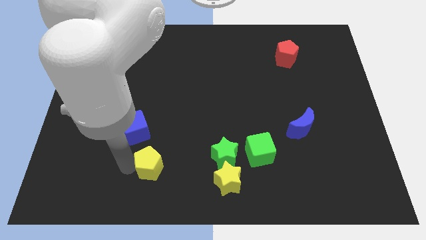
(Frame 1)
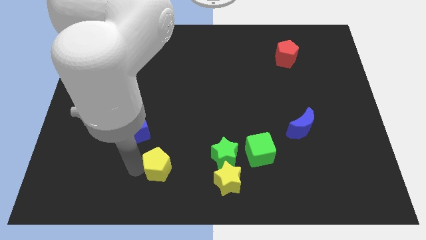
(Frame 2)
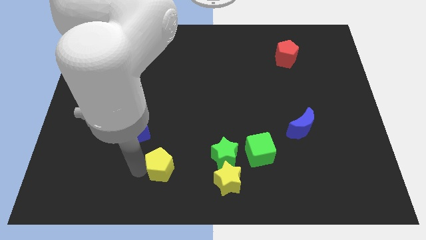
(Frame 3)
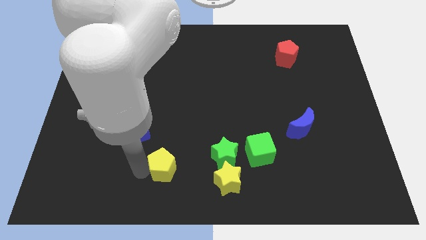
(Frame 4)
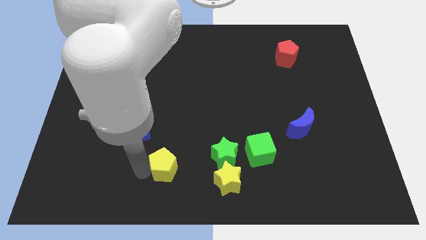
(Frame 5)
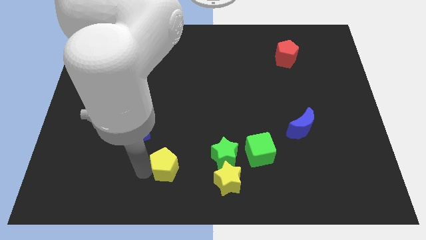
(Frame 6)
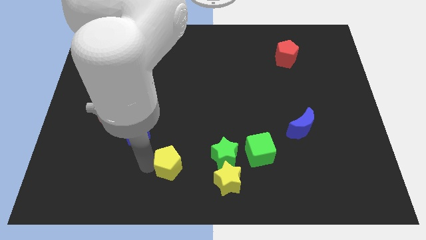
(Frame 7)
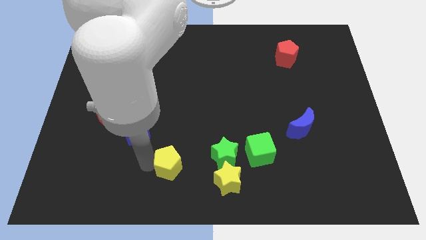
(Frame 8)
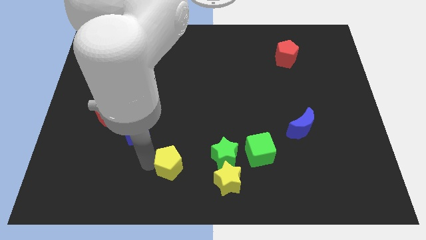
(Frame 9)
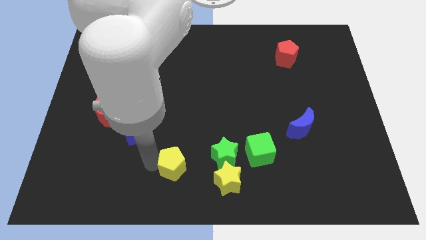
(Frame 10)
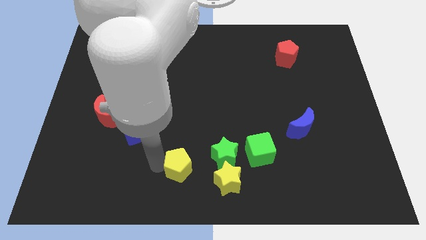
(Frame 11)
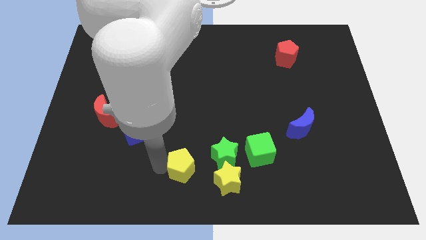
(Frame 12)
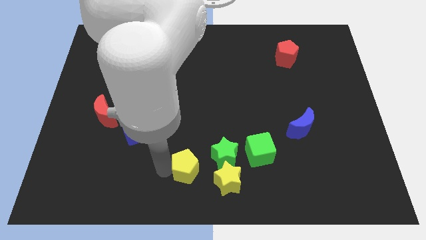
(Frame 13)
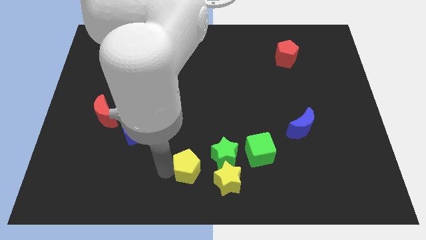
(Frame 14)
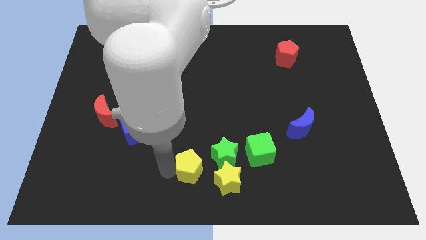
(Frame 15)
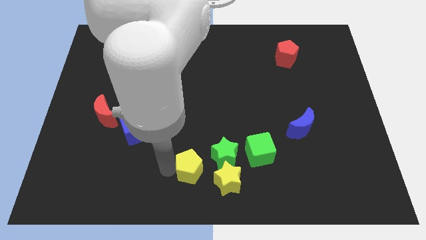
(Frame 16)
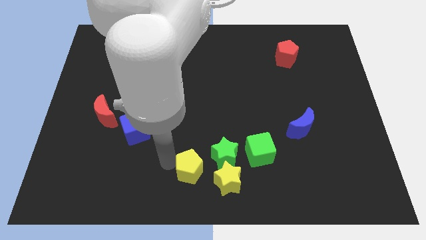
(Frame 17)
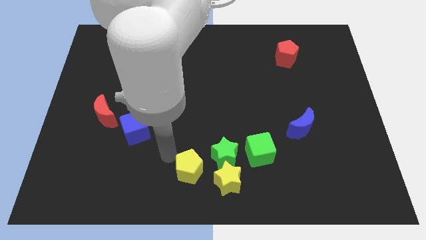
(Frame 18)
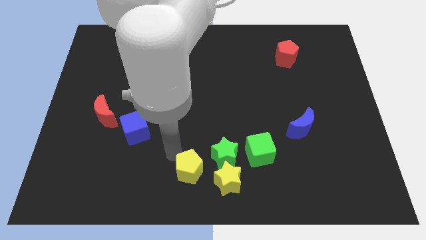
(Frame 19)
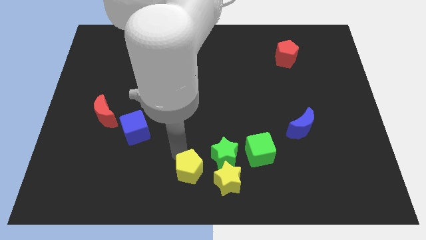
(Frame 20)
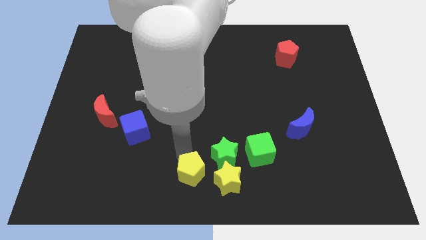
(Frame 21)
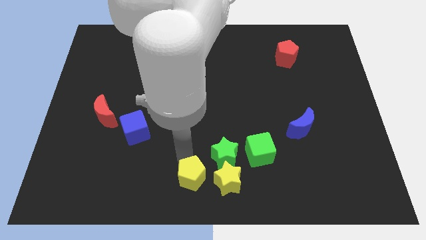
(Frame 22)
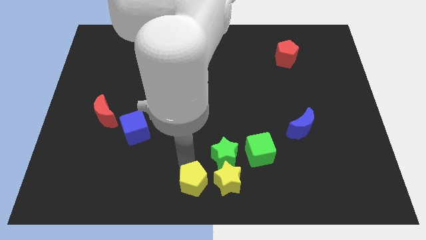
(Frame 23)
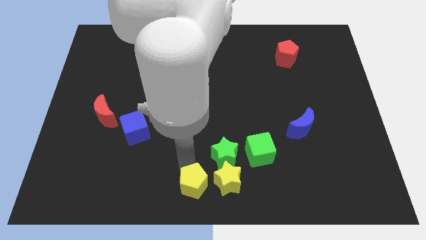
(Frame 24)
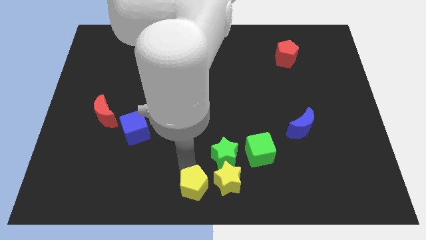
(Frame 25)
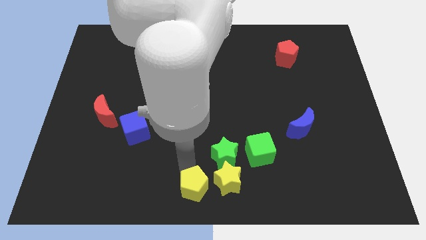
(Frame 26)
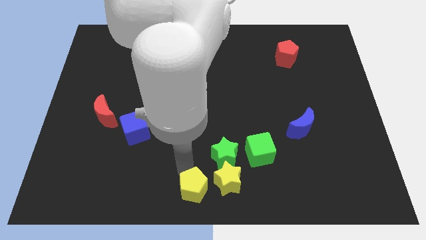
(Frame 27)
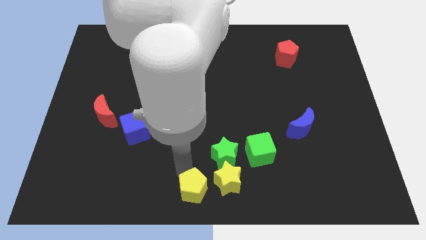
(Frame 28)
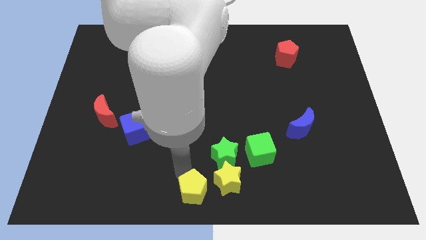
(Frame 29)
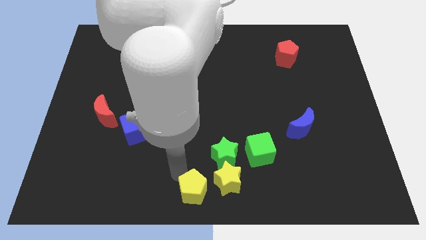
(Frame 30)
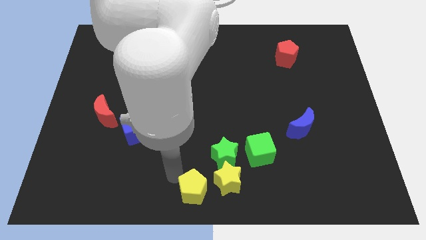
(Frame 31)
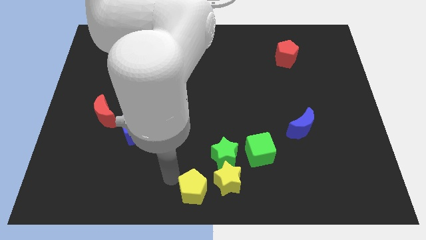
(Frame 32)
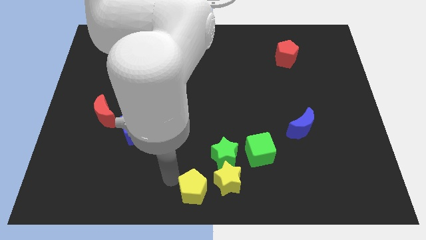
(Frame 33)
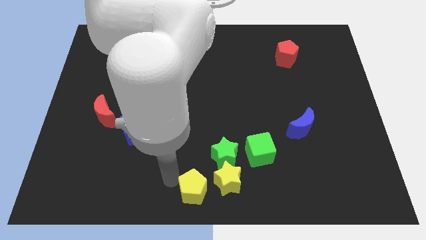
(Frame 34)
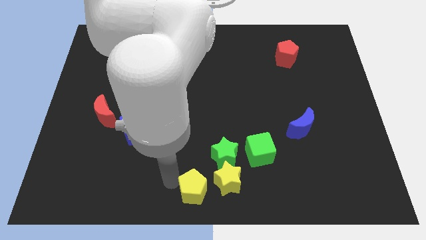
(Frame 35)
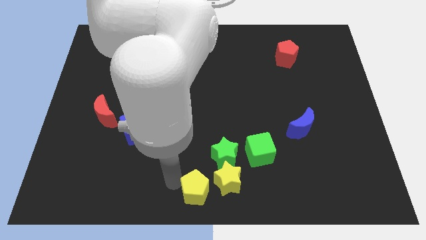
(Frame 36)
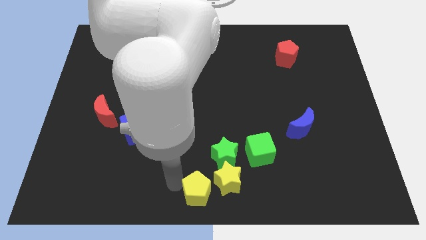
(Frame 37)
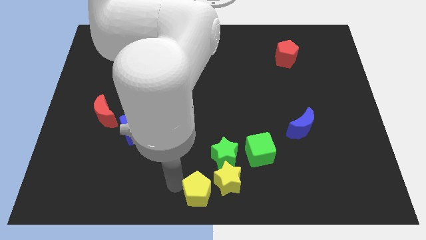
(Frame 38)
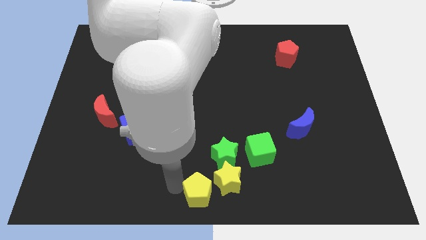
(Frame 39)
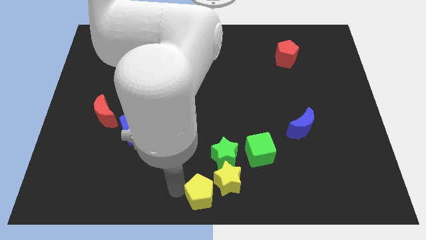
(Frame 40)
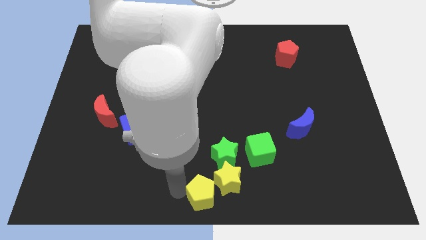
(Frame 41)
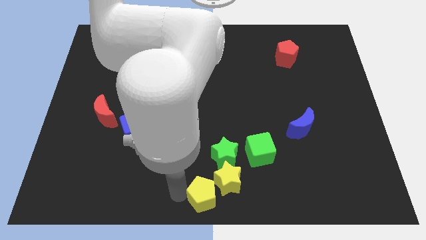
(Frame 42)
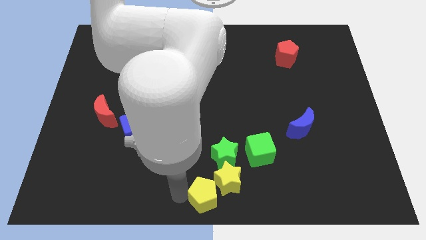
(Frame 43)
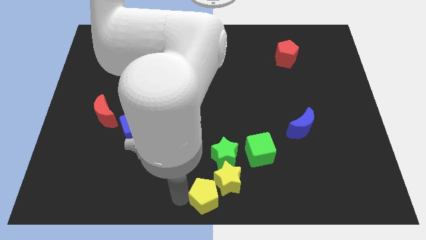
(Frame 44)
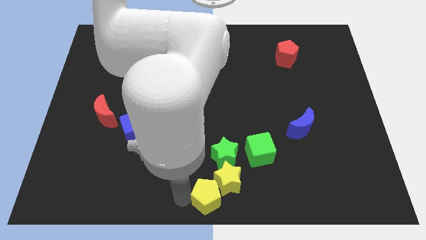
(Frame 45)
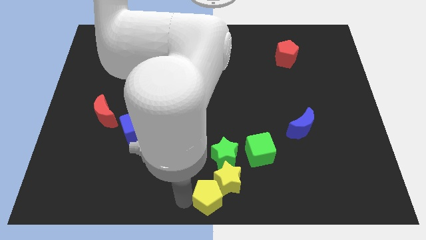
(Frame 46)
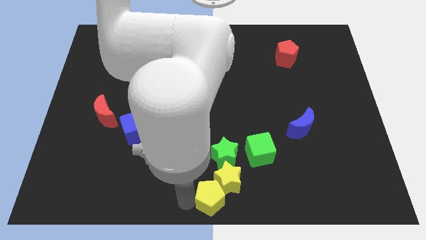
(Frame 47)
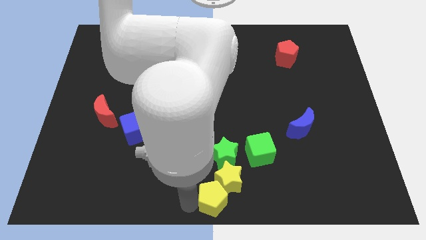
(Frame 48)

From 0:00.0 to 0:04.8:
slide the yellow pentagon into the bottom left side of the yellow star

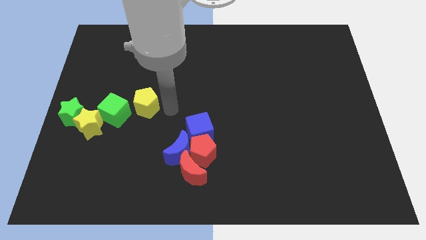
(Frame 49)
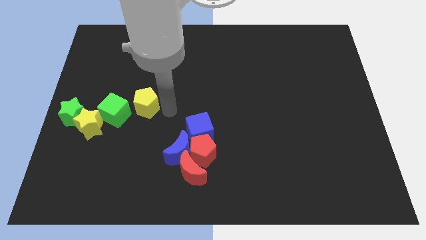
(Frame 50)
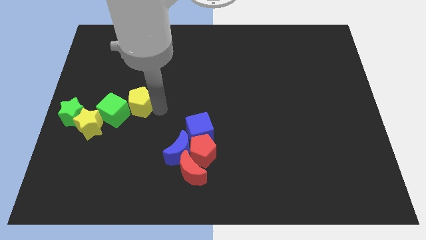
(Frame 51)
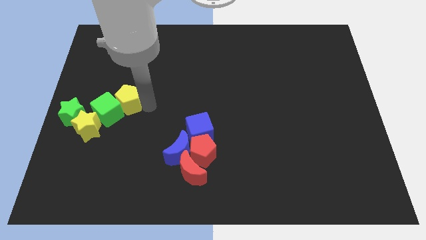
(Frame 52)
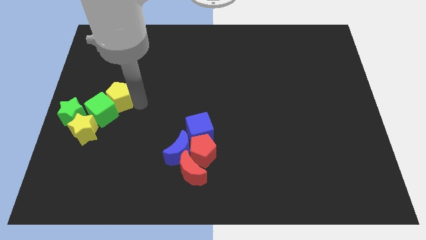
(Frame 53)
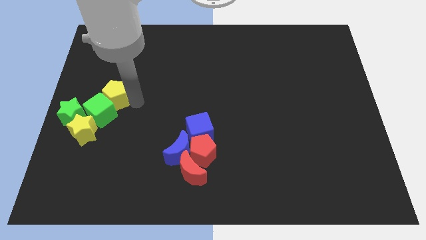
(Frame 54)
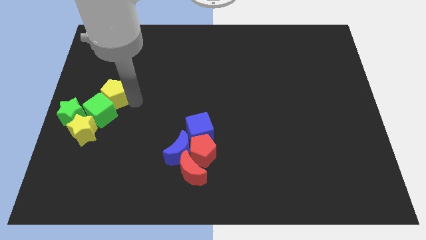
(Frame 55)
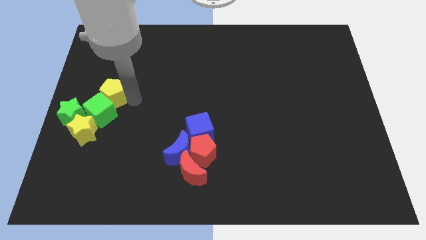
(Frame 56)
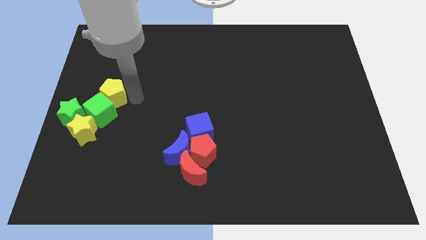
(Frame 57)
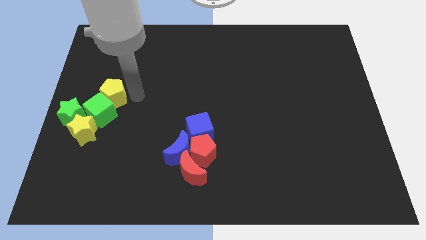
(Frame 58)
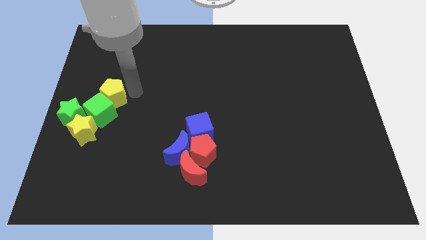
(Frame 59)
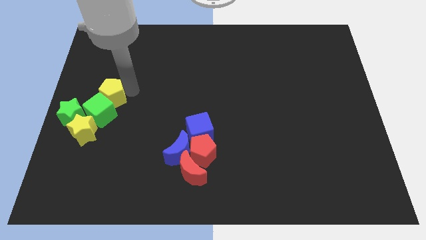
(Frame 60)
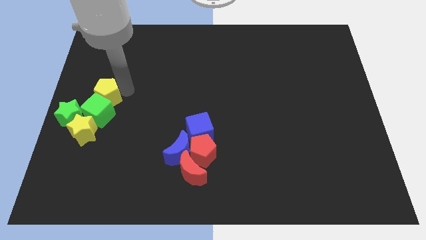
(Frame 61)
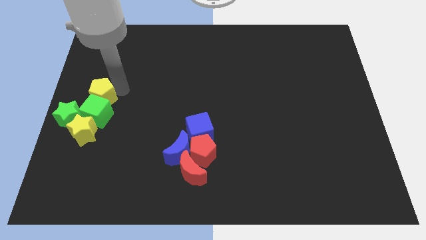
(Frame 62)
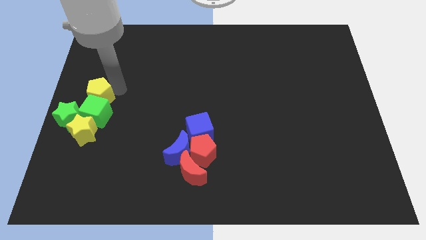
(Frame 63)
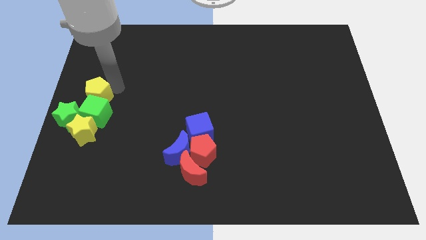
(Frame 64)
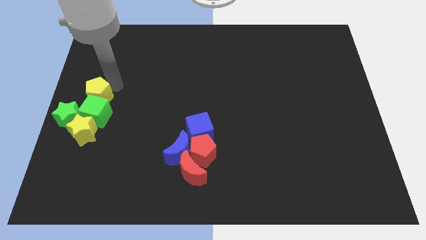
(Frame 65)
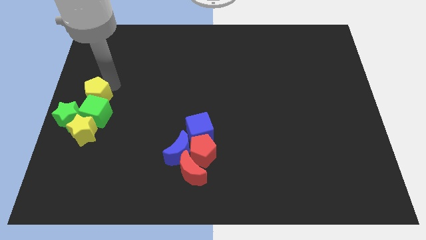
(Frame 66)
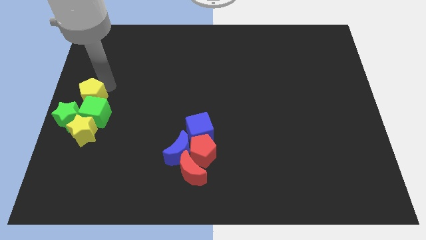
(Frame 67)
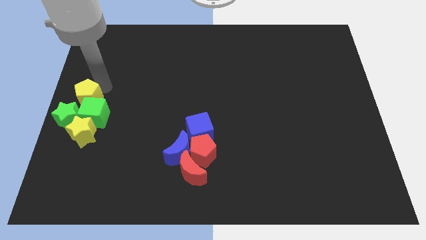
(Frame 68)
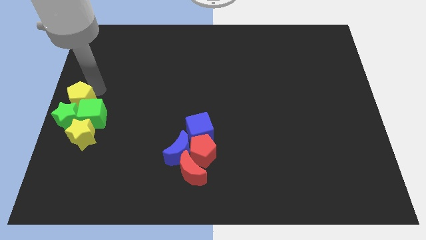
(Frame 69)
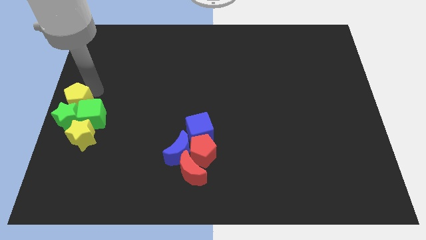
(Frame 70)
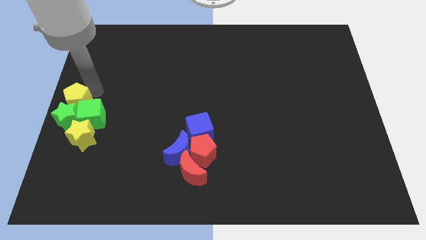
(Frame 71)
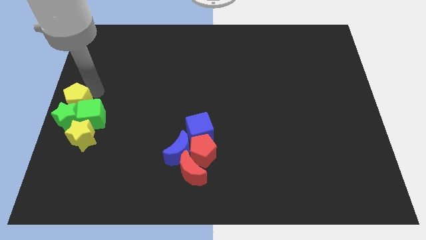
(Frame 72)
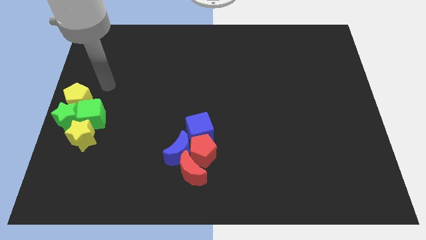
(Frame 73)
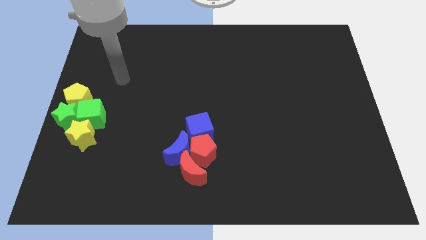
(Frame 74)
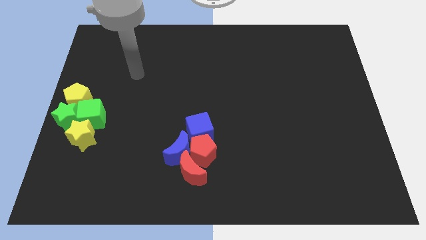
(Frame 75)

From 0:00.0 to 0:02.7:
move the group of blocks to the left center of the board

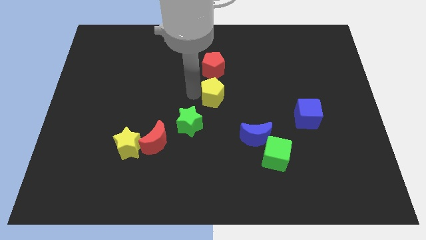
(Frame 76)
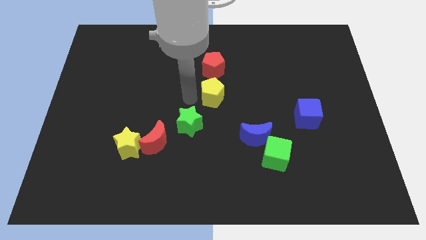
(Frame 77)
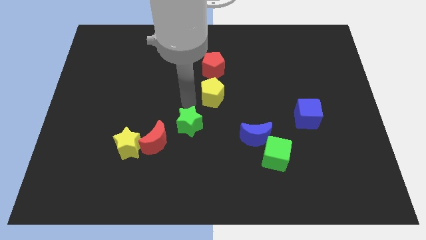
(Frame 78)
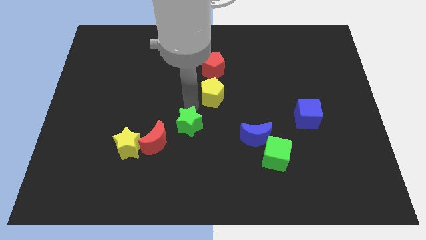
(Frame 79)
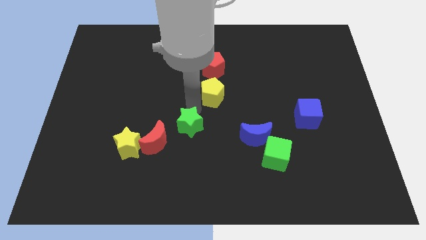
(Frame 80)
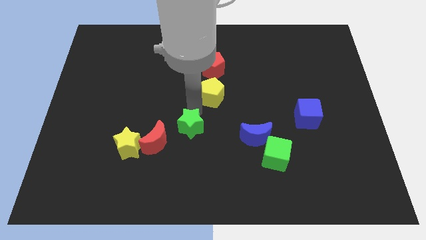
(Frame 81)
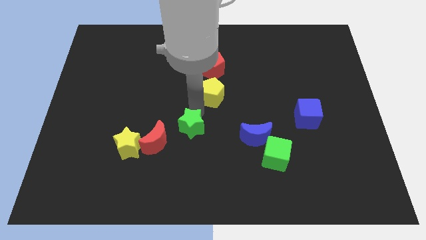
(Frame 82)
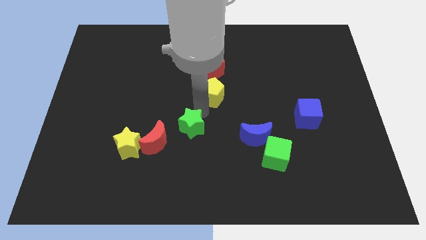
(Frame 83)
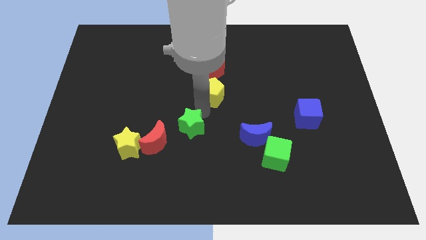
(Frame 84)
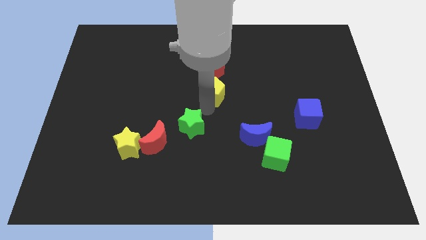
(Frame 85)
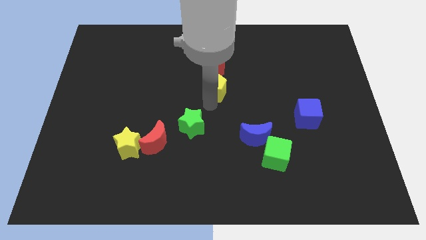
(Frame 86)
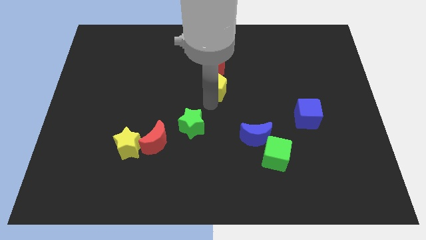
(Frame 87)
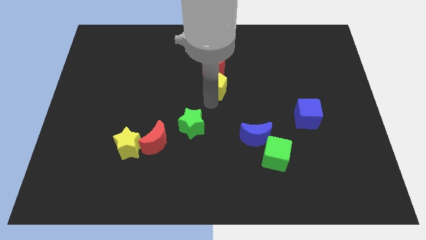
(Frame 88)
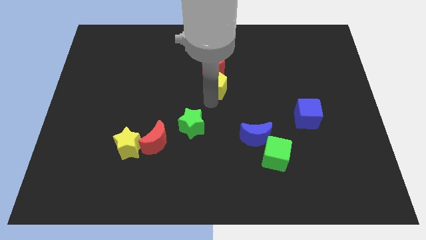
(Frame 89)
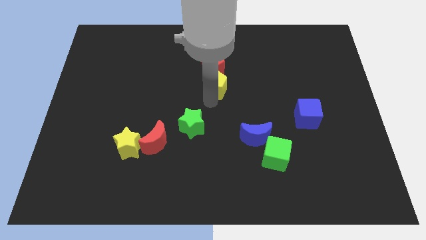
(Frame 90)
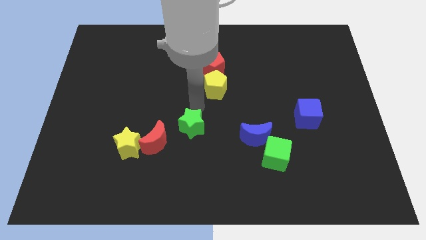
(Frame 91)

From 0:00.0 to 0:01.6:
push the yellow pentagon into the red pentagon
